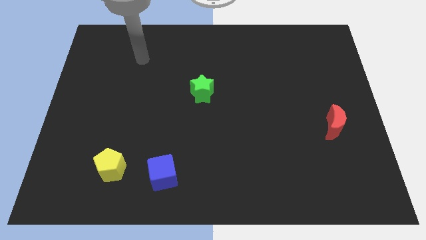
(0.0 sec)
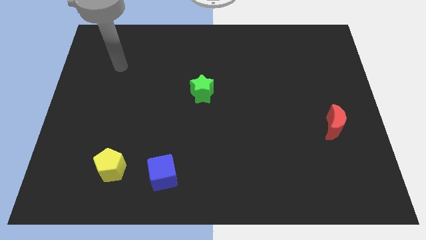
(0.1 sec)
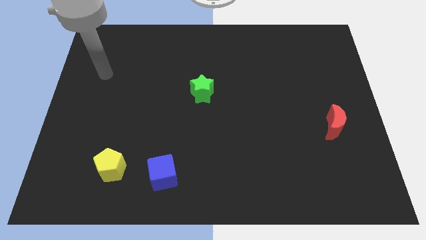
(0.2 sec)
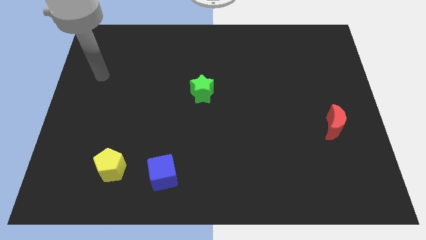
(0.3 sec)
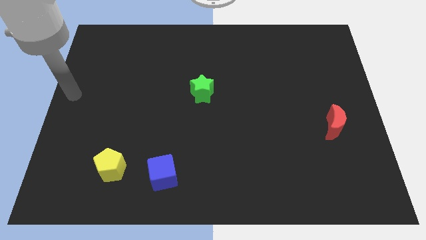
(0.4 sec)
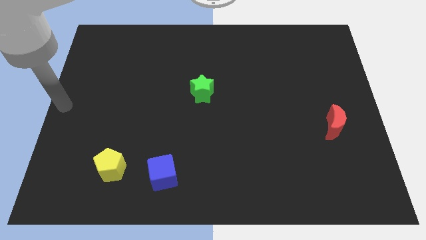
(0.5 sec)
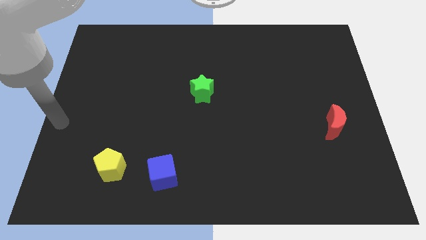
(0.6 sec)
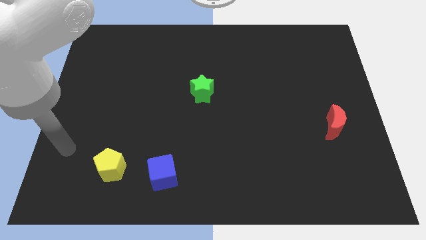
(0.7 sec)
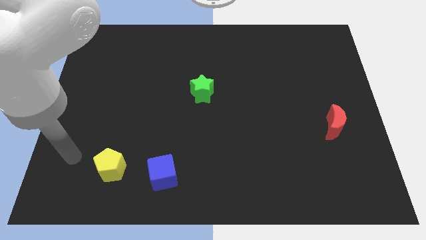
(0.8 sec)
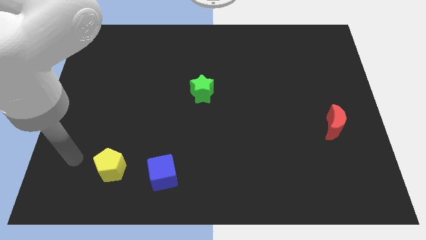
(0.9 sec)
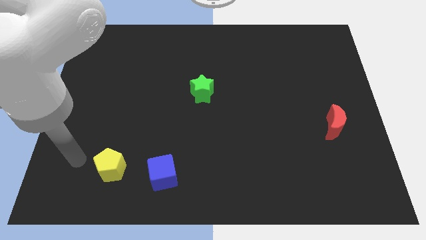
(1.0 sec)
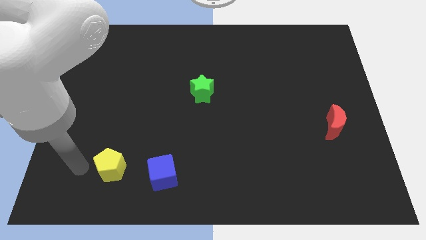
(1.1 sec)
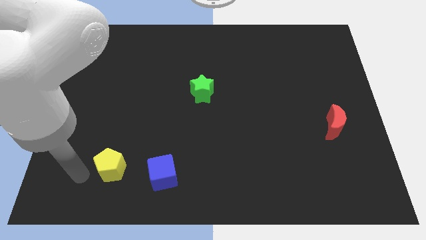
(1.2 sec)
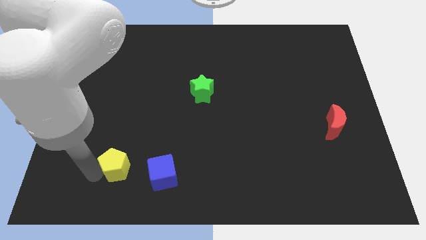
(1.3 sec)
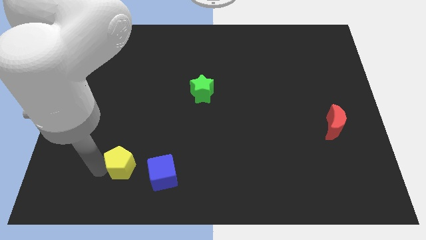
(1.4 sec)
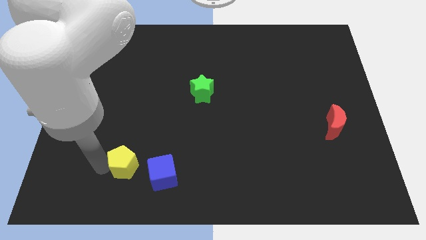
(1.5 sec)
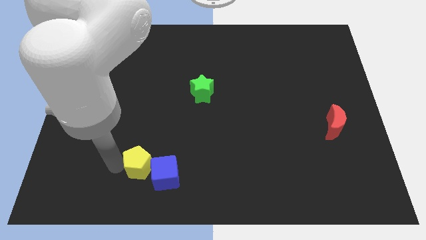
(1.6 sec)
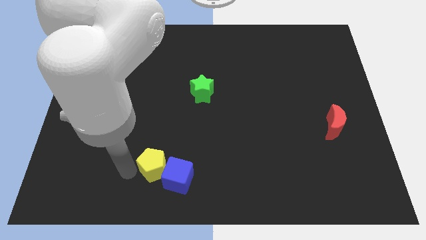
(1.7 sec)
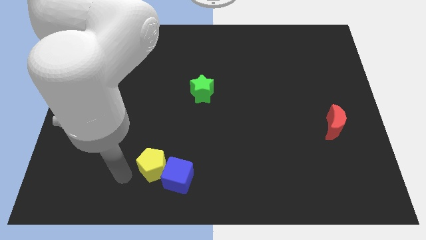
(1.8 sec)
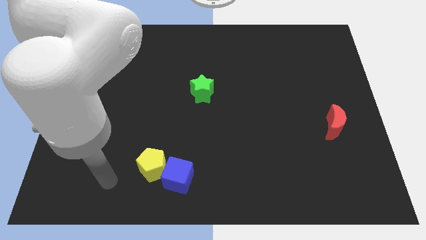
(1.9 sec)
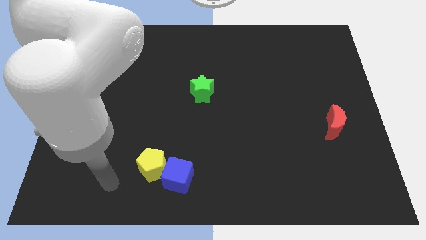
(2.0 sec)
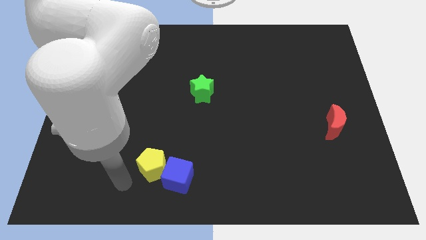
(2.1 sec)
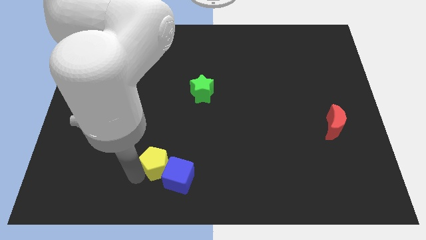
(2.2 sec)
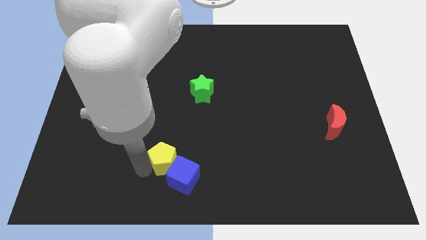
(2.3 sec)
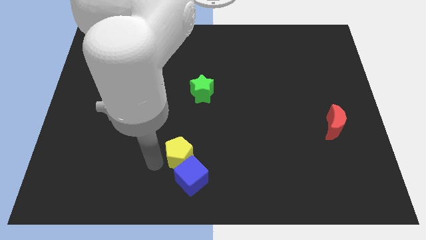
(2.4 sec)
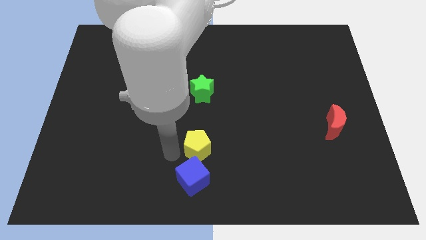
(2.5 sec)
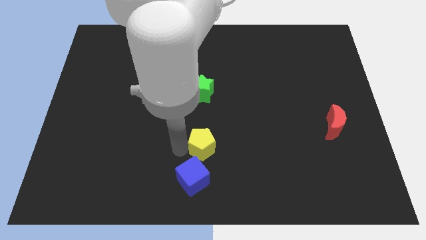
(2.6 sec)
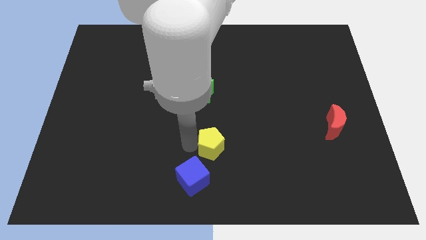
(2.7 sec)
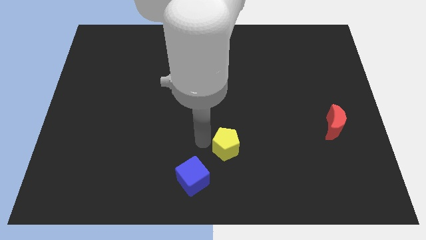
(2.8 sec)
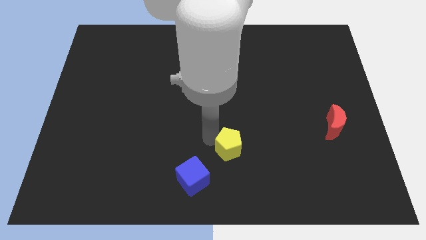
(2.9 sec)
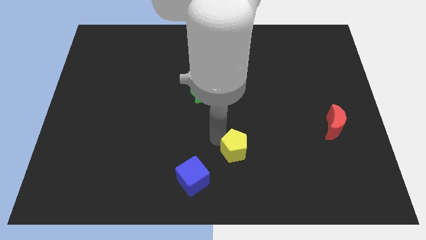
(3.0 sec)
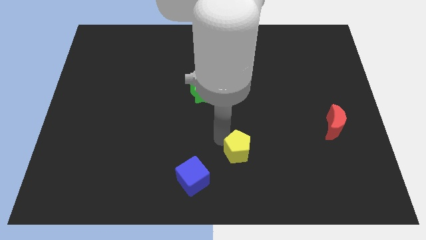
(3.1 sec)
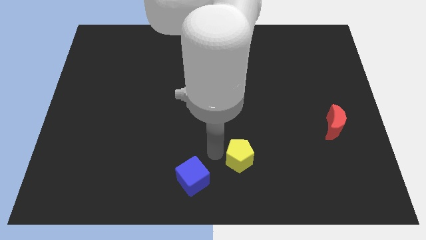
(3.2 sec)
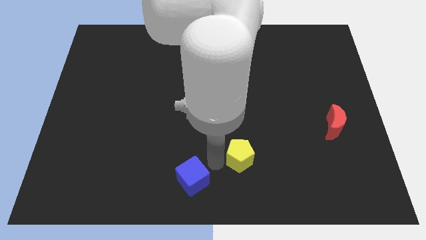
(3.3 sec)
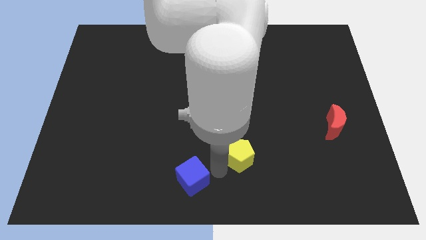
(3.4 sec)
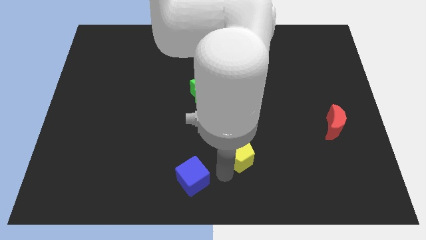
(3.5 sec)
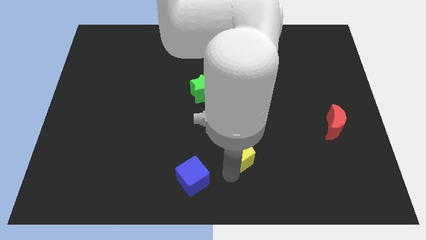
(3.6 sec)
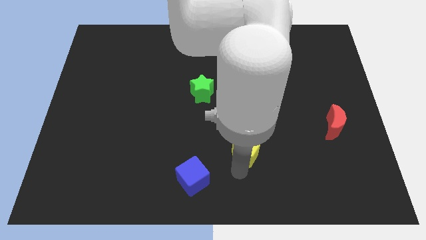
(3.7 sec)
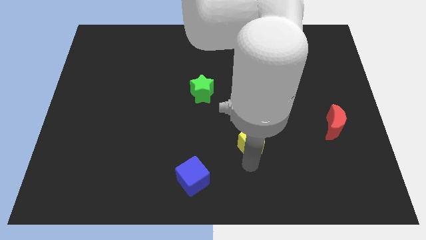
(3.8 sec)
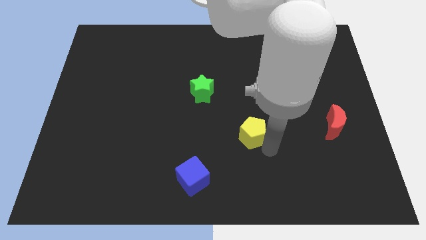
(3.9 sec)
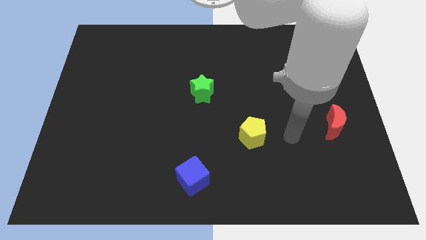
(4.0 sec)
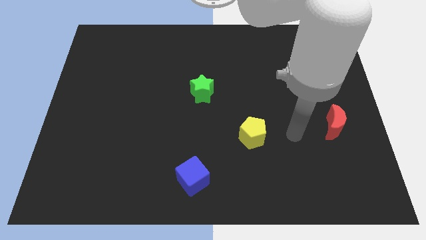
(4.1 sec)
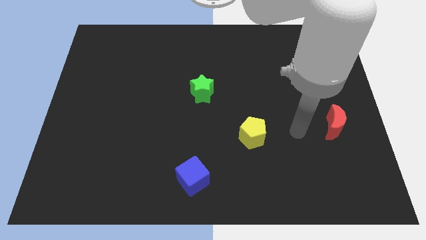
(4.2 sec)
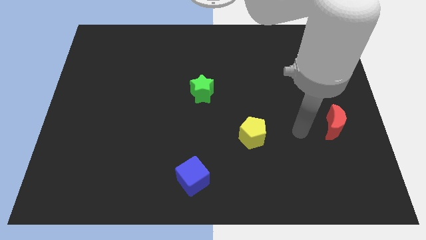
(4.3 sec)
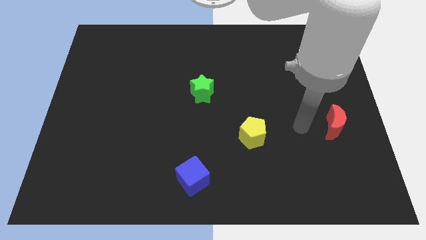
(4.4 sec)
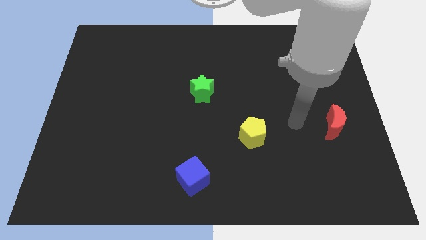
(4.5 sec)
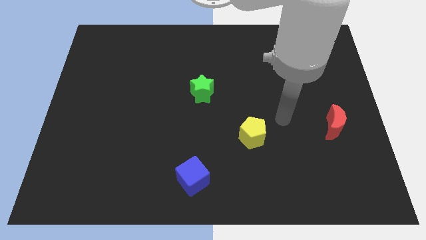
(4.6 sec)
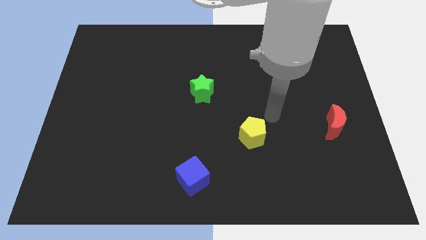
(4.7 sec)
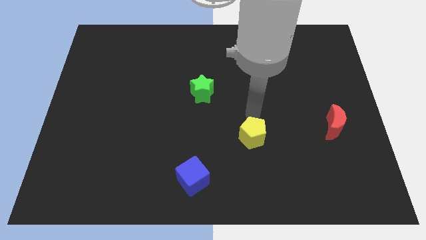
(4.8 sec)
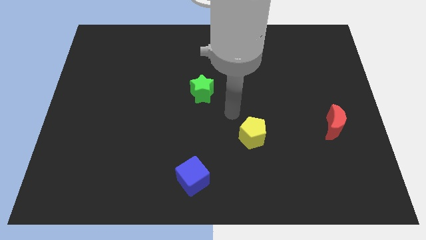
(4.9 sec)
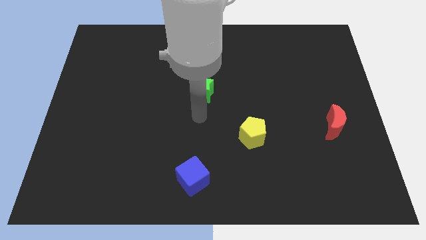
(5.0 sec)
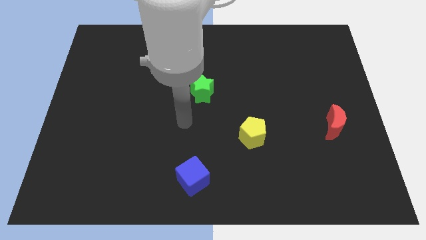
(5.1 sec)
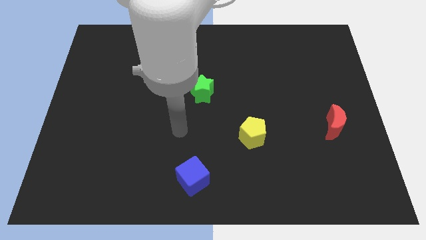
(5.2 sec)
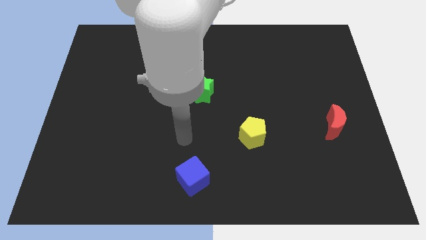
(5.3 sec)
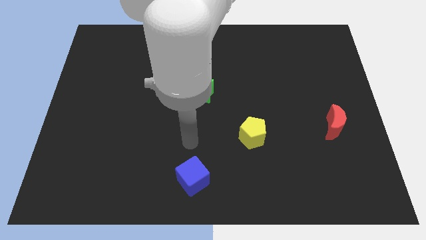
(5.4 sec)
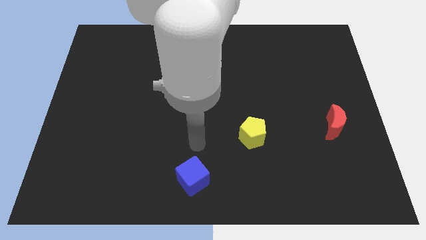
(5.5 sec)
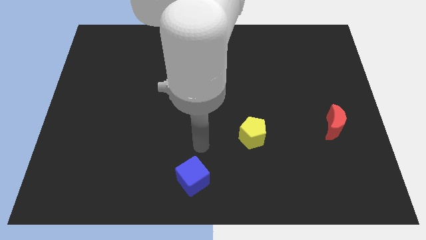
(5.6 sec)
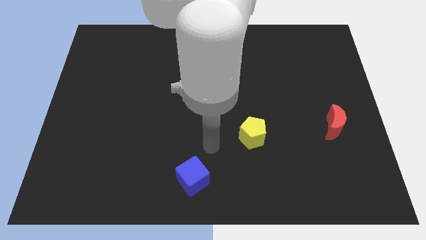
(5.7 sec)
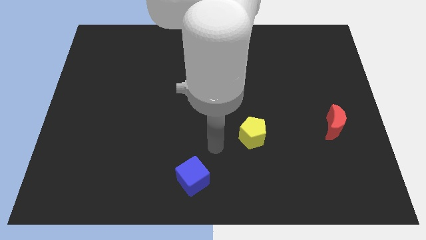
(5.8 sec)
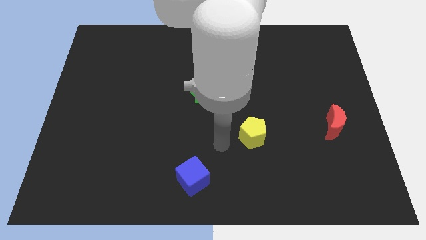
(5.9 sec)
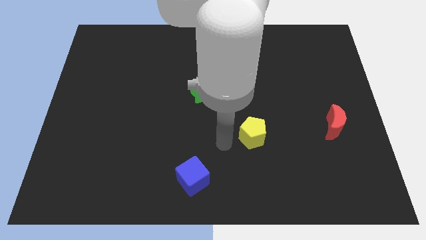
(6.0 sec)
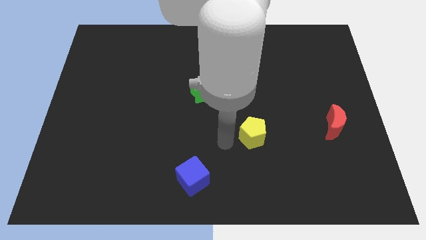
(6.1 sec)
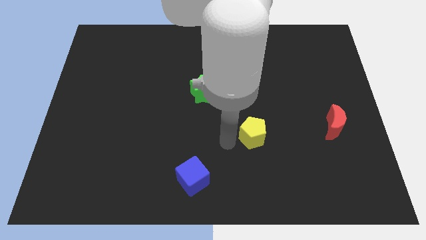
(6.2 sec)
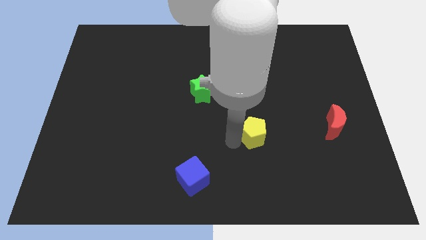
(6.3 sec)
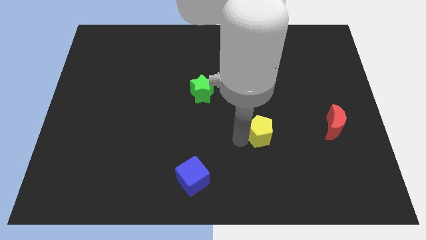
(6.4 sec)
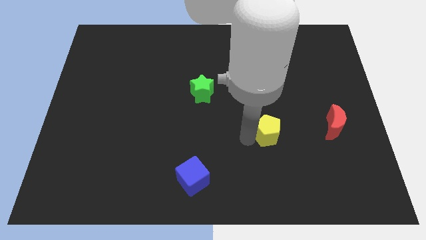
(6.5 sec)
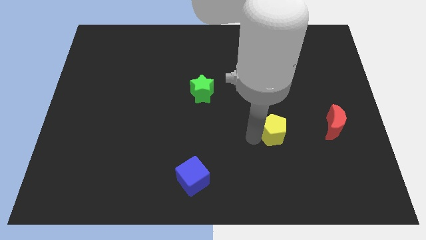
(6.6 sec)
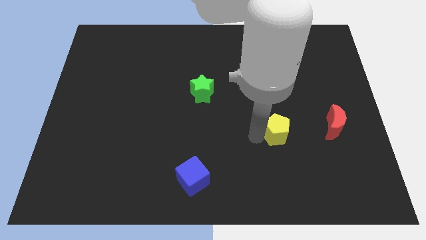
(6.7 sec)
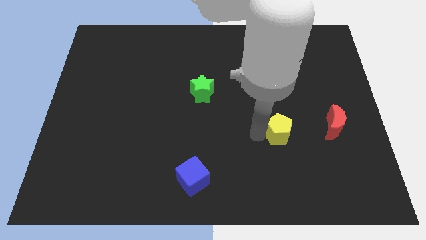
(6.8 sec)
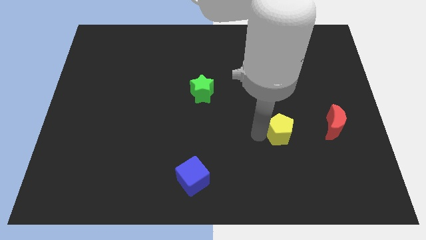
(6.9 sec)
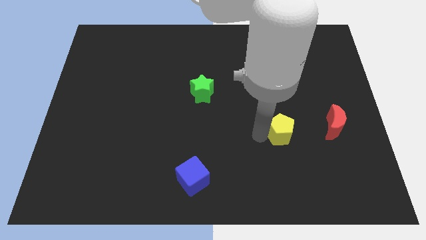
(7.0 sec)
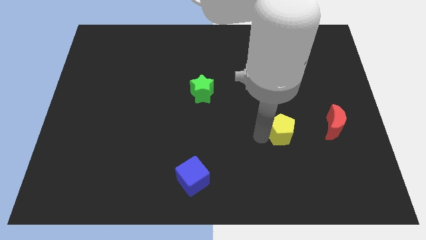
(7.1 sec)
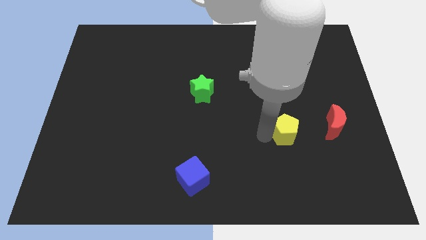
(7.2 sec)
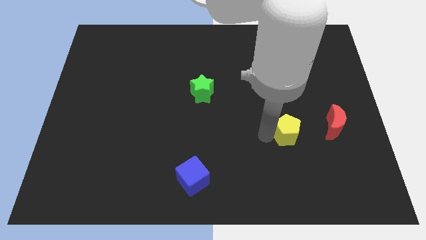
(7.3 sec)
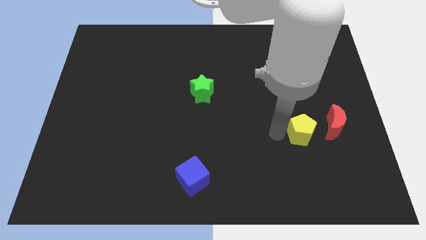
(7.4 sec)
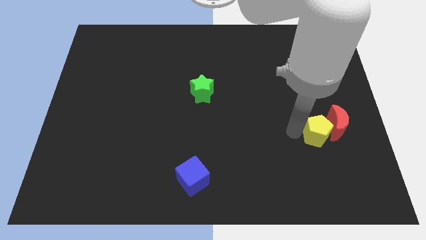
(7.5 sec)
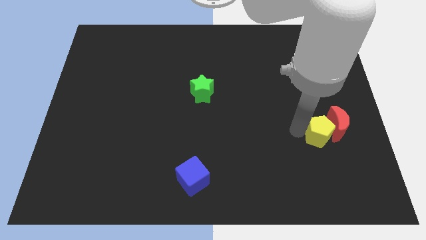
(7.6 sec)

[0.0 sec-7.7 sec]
slide the pentagon next to the moon

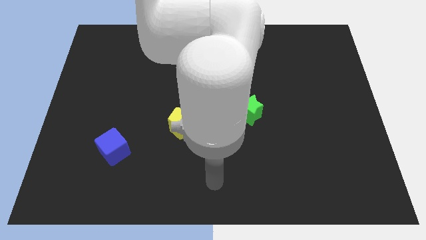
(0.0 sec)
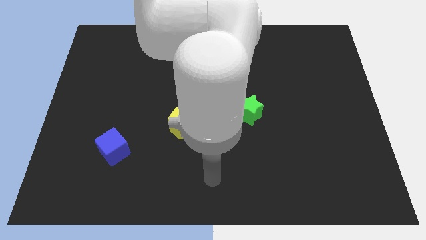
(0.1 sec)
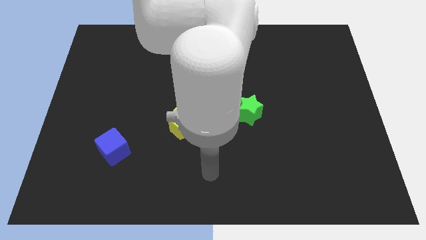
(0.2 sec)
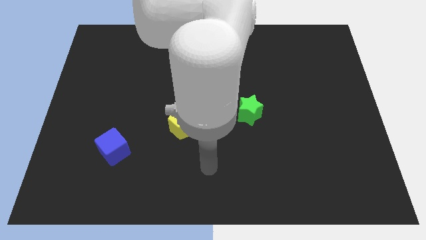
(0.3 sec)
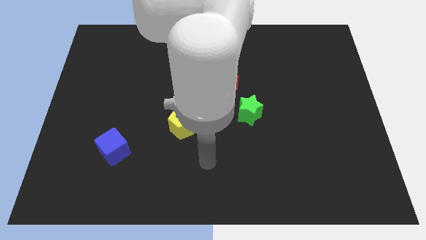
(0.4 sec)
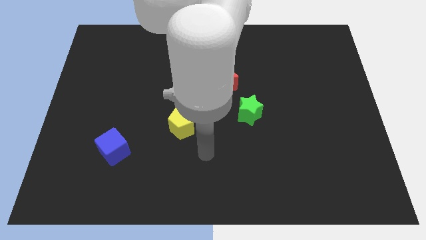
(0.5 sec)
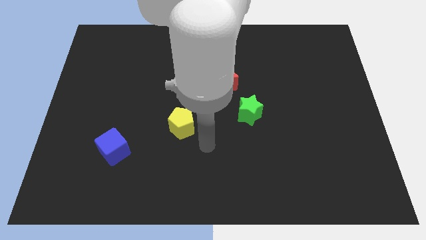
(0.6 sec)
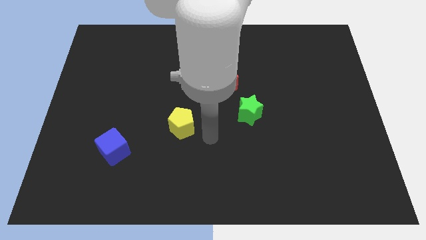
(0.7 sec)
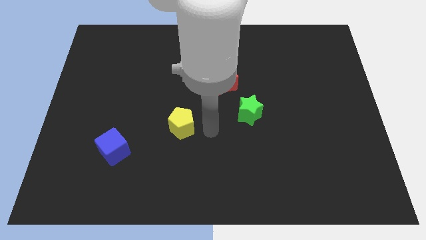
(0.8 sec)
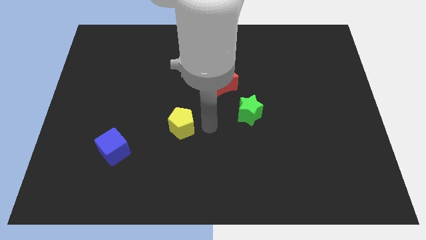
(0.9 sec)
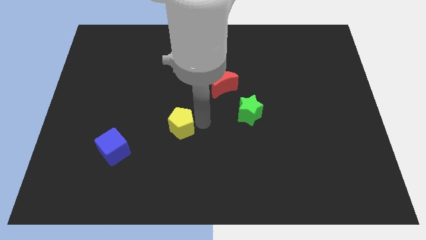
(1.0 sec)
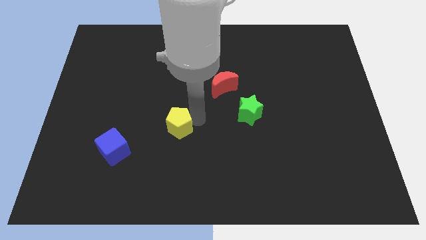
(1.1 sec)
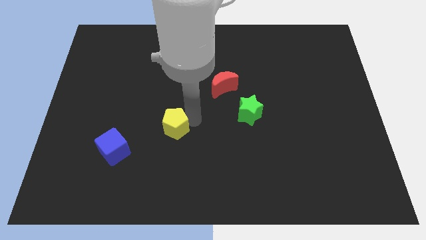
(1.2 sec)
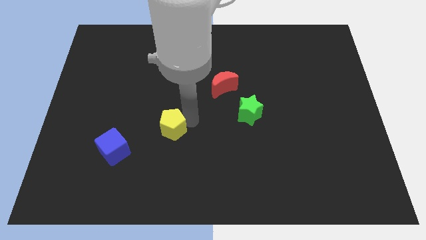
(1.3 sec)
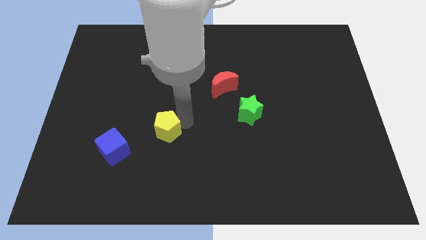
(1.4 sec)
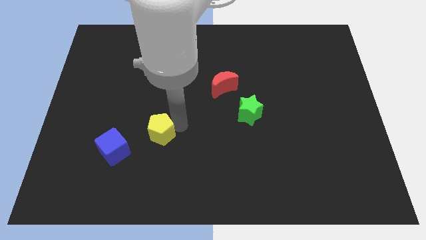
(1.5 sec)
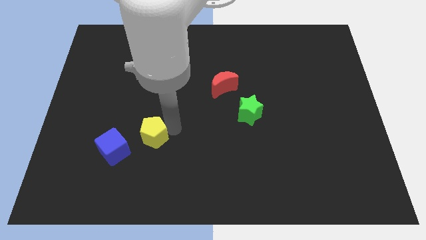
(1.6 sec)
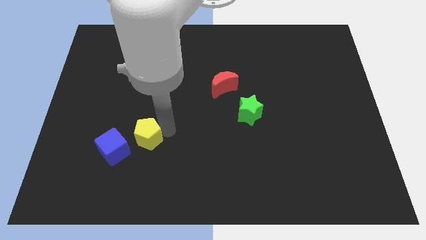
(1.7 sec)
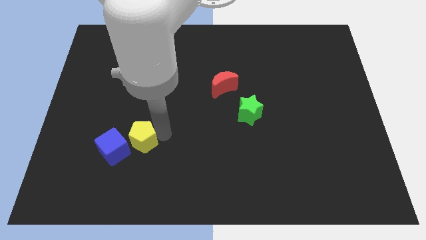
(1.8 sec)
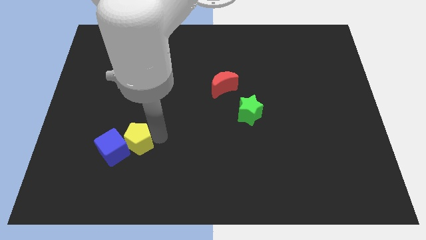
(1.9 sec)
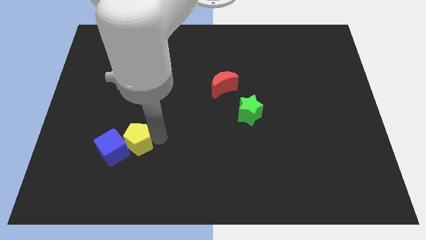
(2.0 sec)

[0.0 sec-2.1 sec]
move the pentagon towards the cube
